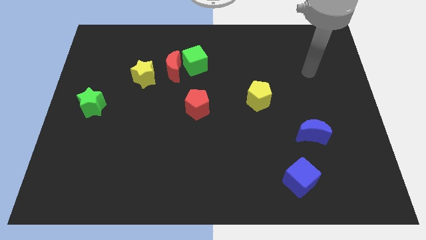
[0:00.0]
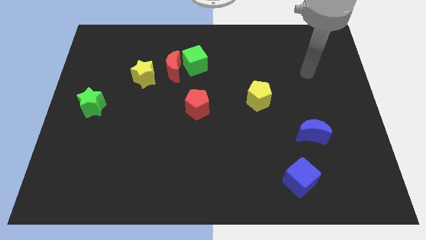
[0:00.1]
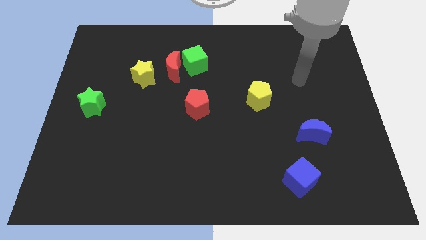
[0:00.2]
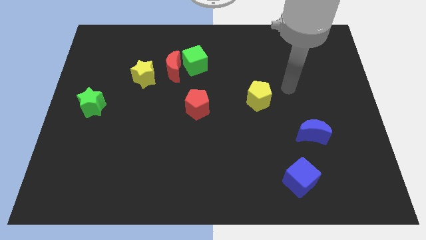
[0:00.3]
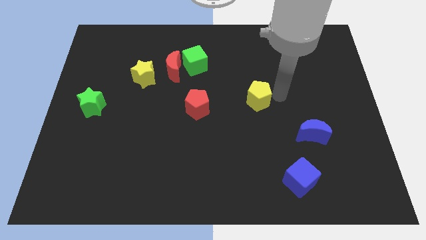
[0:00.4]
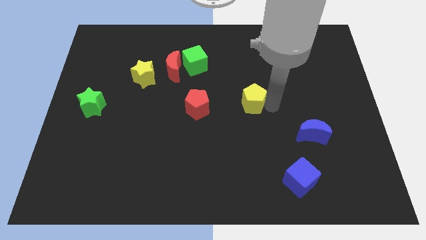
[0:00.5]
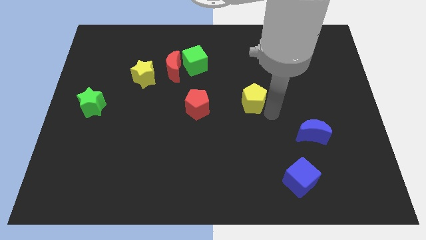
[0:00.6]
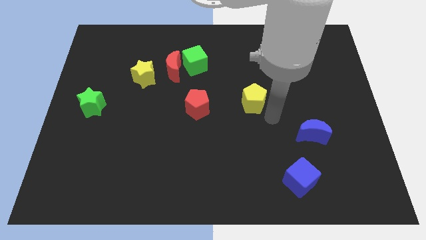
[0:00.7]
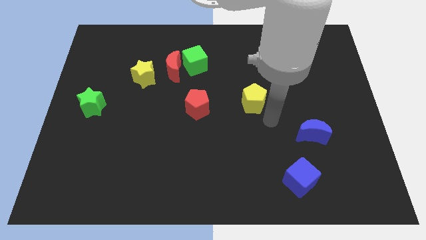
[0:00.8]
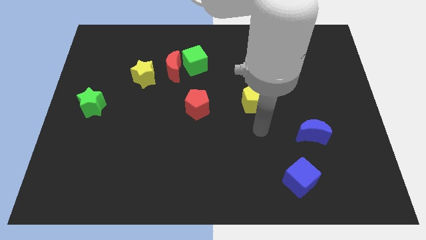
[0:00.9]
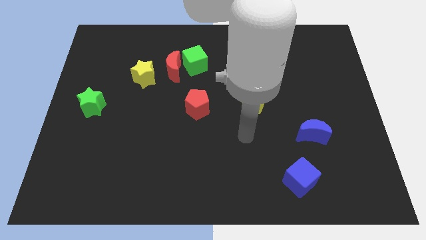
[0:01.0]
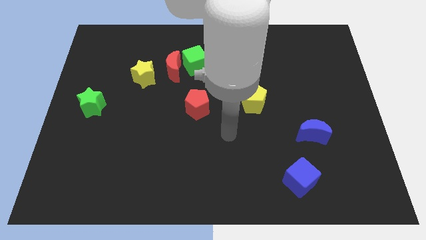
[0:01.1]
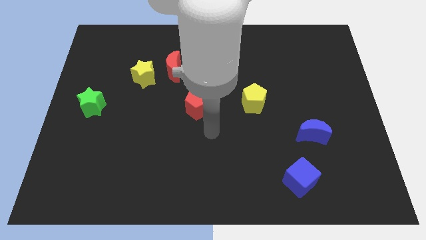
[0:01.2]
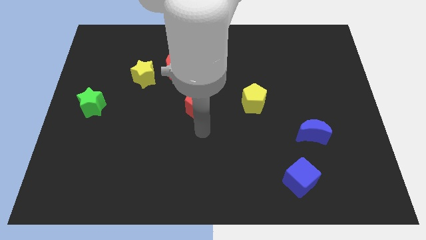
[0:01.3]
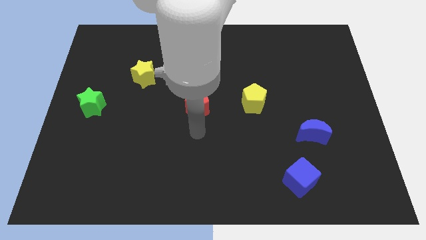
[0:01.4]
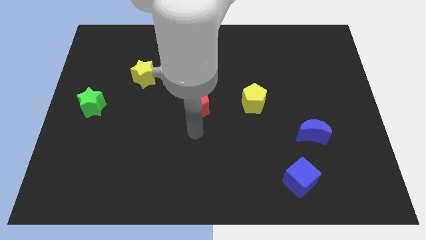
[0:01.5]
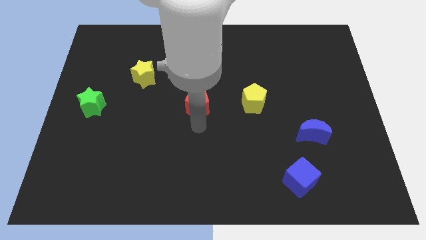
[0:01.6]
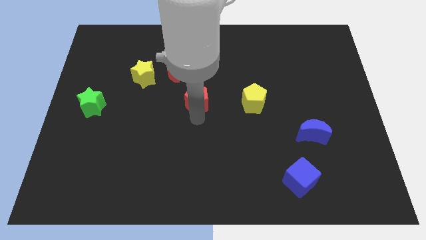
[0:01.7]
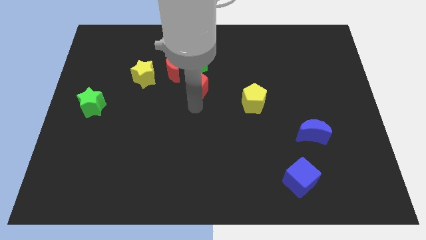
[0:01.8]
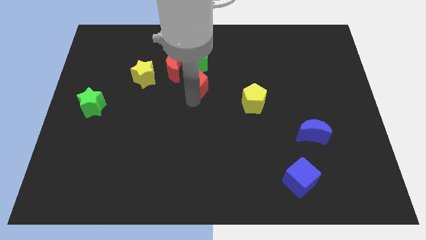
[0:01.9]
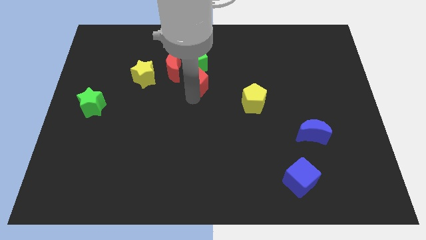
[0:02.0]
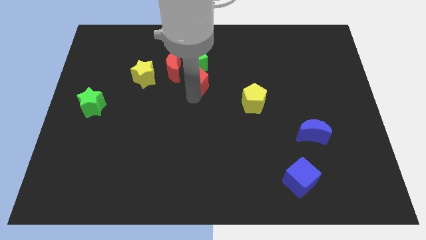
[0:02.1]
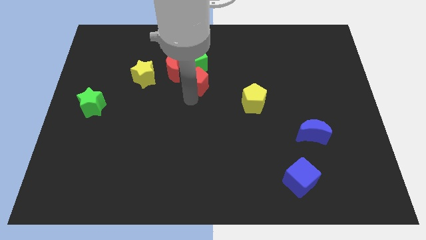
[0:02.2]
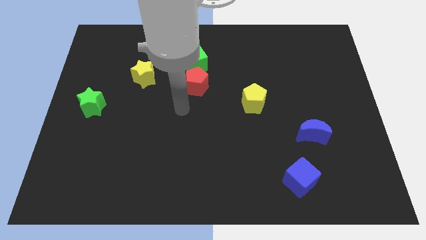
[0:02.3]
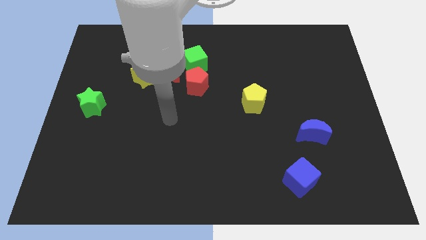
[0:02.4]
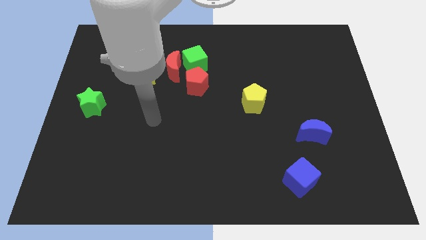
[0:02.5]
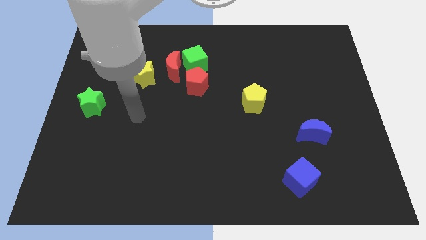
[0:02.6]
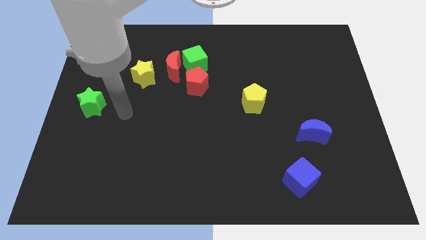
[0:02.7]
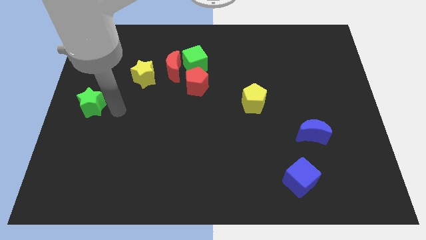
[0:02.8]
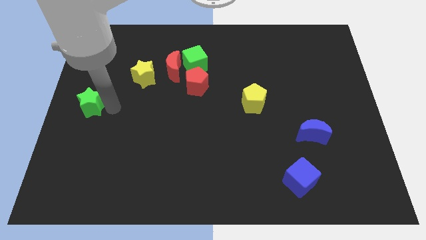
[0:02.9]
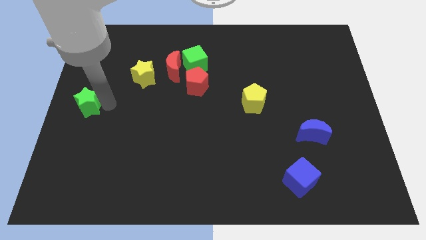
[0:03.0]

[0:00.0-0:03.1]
move your arm to the right of green star

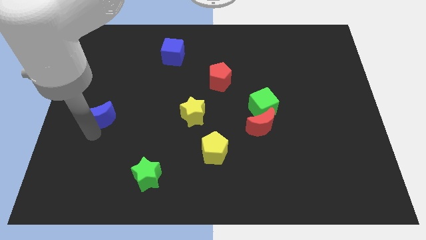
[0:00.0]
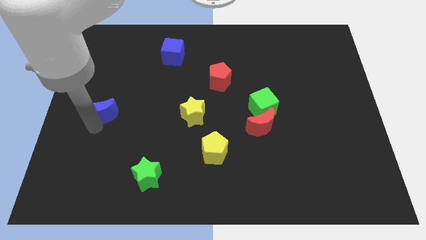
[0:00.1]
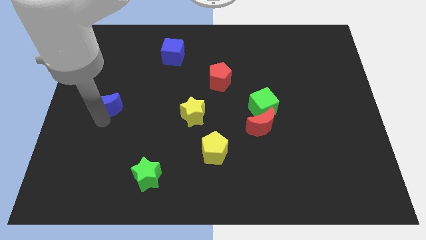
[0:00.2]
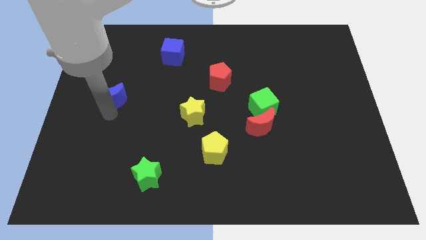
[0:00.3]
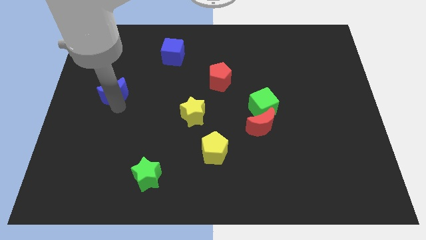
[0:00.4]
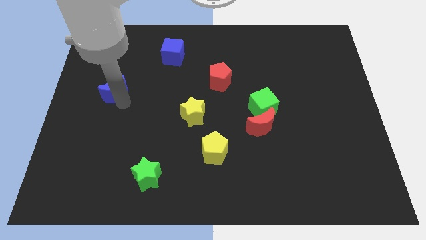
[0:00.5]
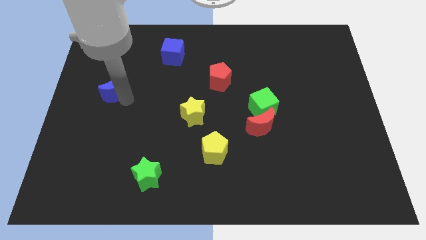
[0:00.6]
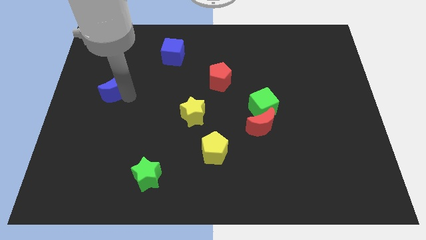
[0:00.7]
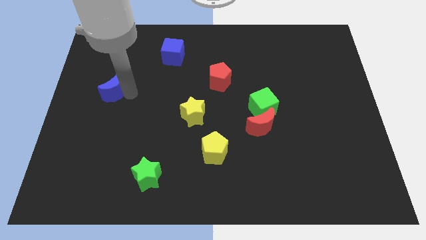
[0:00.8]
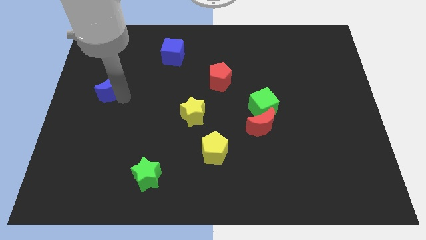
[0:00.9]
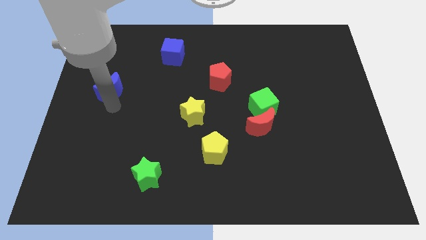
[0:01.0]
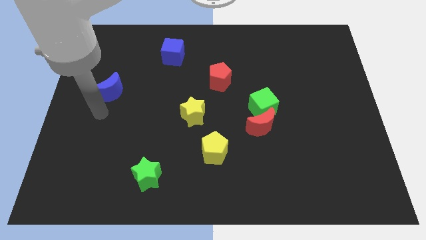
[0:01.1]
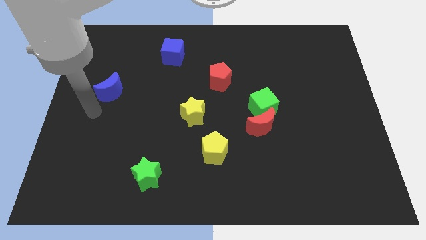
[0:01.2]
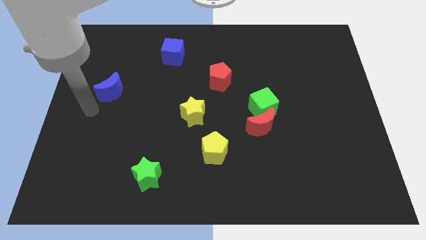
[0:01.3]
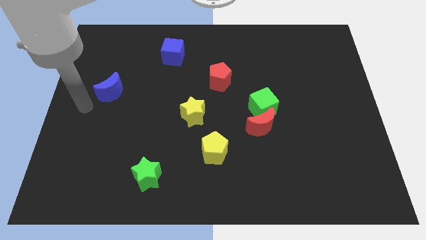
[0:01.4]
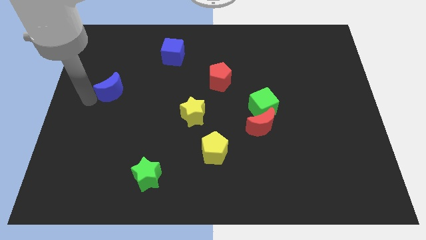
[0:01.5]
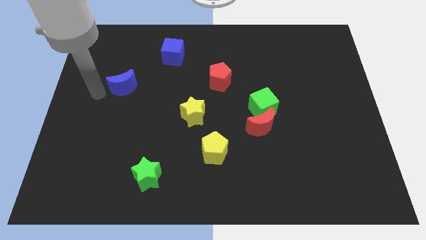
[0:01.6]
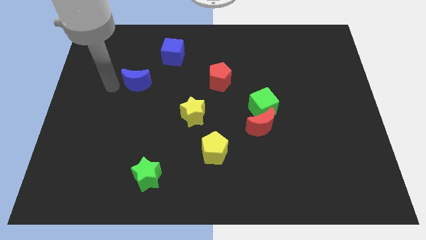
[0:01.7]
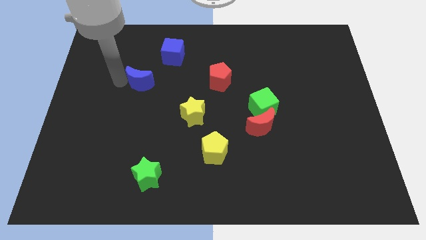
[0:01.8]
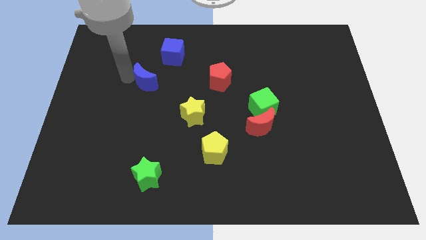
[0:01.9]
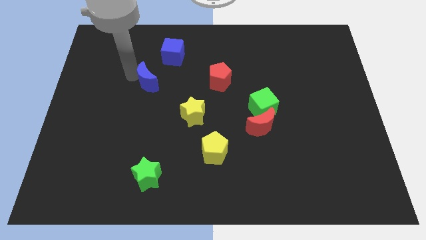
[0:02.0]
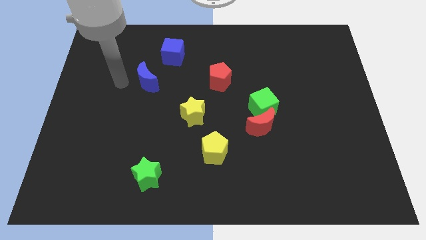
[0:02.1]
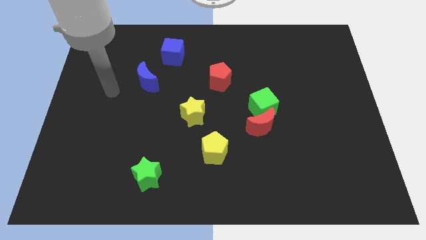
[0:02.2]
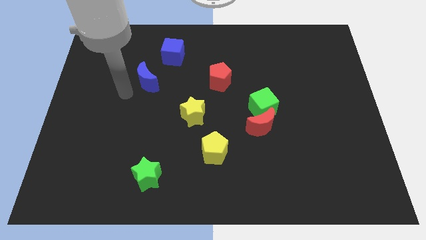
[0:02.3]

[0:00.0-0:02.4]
push the blue moon to the bottom left of blue cube

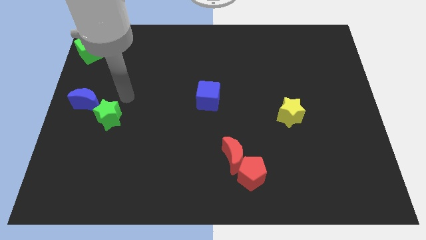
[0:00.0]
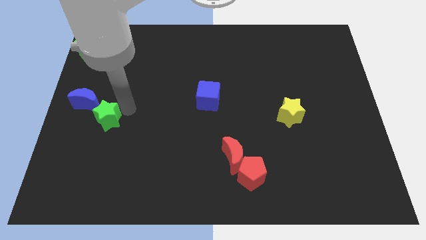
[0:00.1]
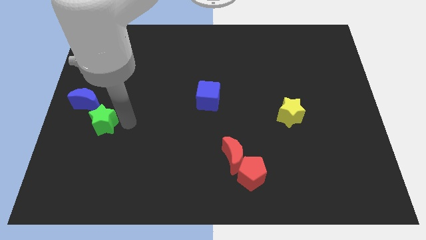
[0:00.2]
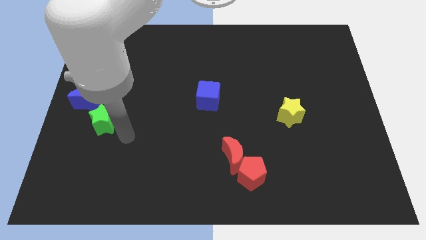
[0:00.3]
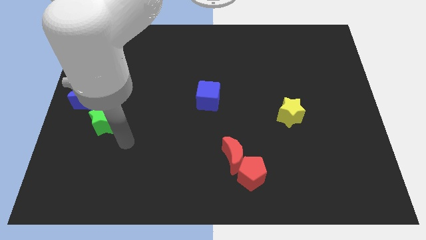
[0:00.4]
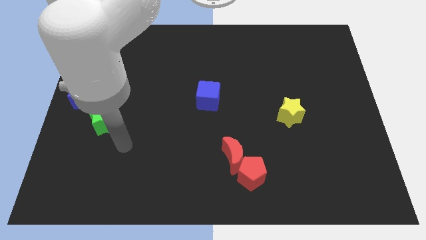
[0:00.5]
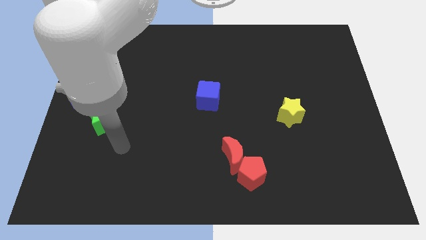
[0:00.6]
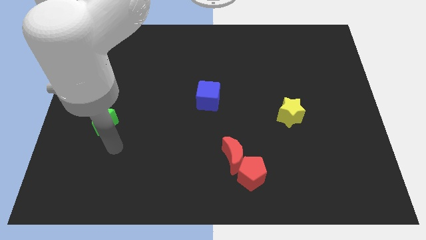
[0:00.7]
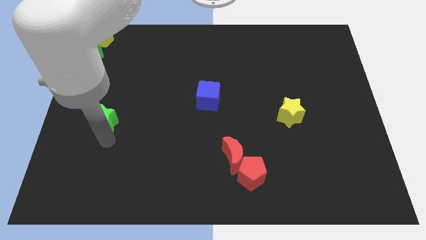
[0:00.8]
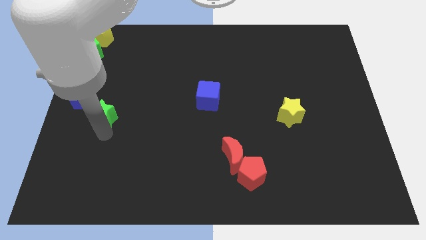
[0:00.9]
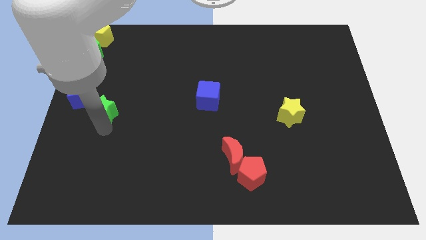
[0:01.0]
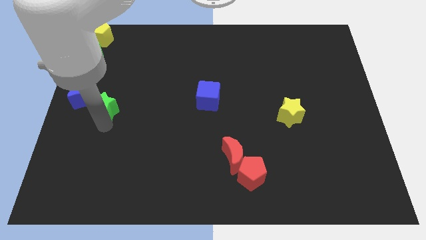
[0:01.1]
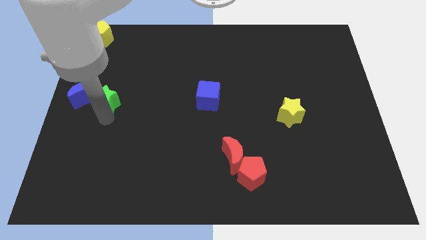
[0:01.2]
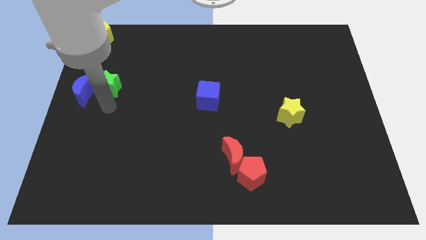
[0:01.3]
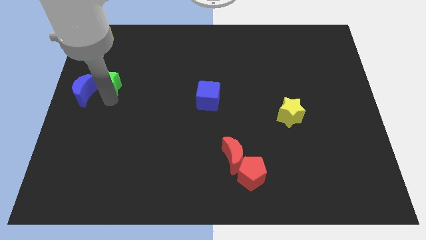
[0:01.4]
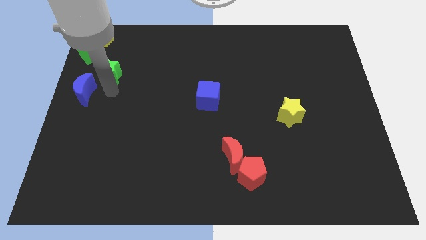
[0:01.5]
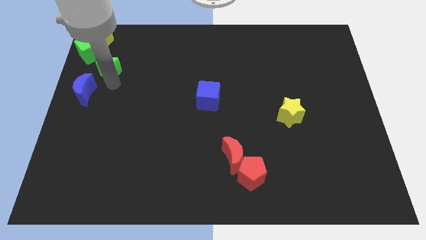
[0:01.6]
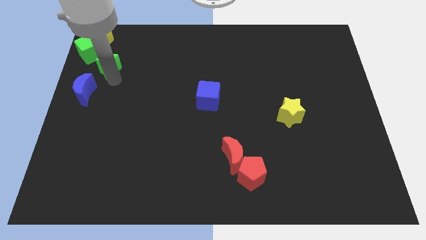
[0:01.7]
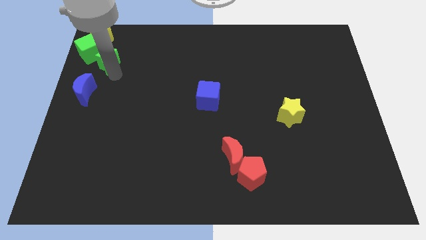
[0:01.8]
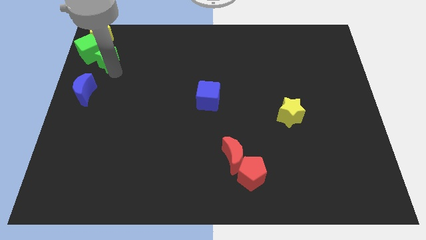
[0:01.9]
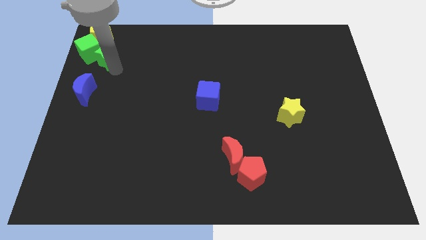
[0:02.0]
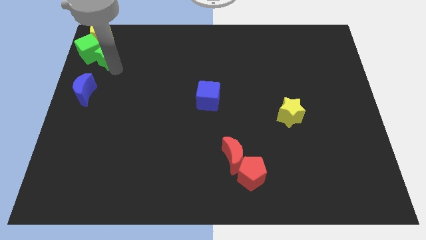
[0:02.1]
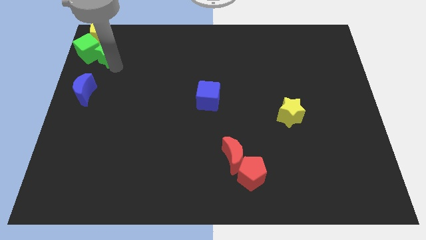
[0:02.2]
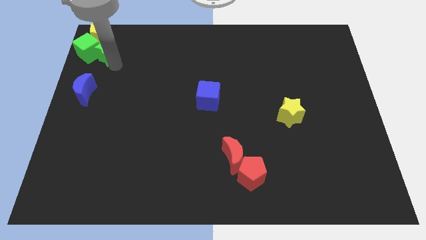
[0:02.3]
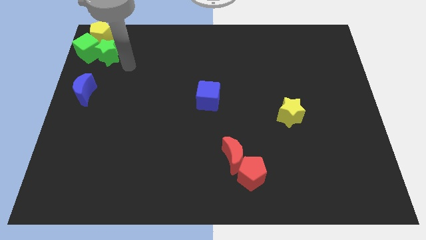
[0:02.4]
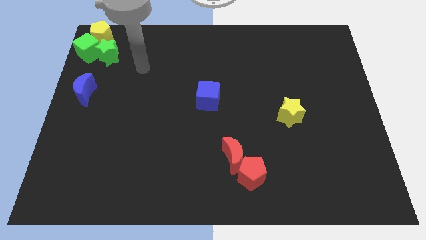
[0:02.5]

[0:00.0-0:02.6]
move the green star below into the green cube

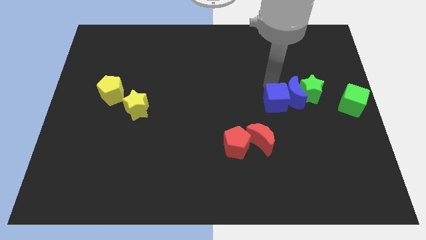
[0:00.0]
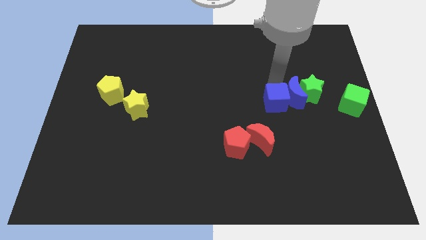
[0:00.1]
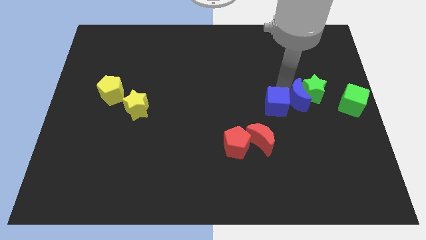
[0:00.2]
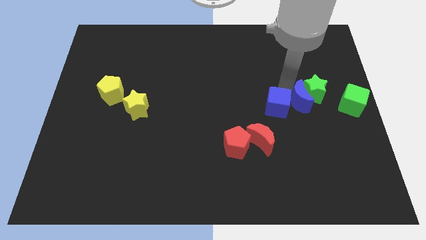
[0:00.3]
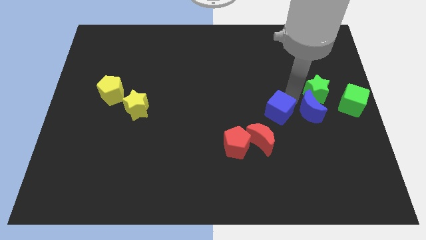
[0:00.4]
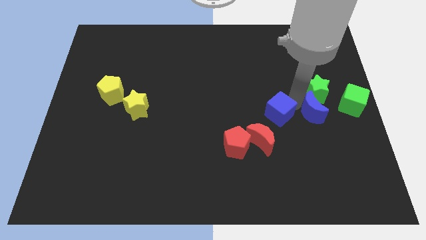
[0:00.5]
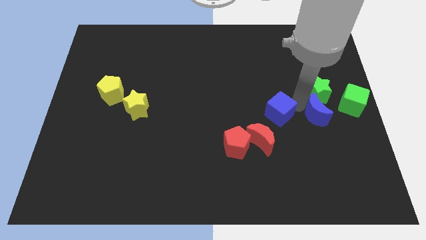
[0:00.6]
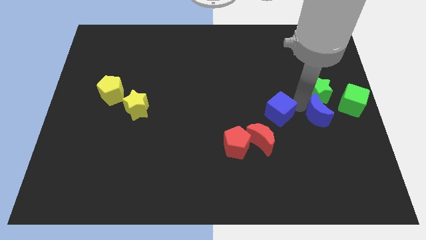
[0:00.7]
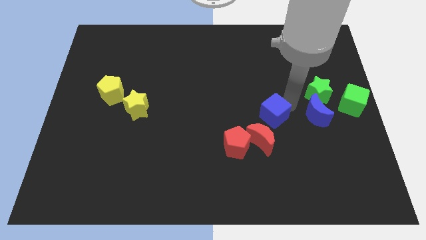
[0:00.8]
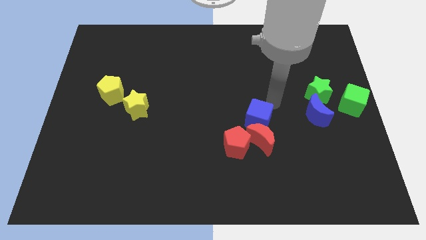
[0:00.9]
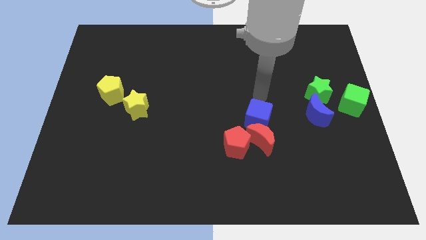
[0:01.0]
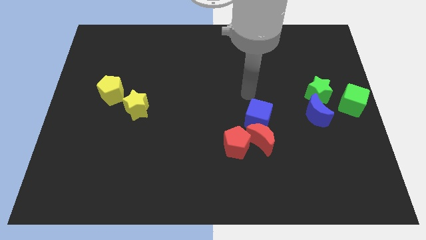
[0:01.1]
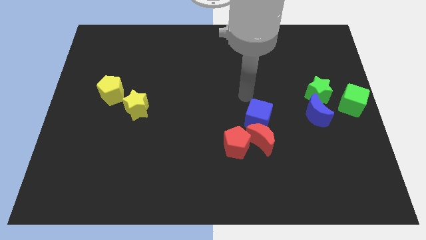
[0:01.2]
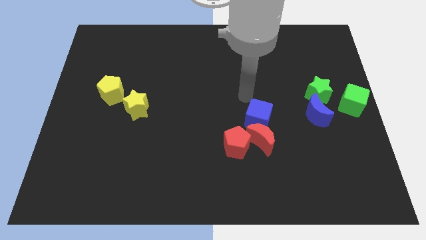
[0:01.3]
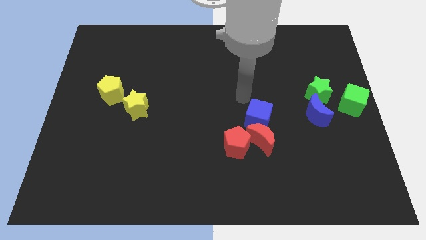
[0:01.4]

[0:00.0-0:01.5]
separate blue cube and the blue crescent
